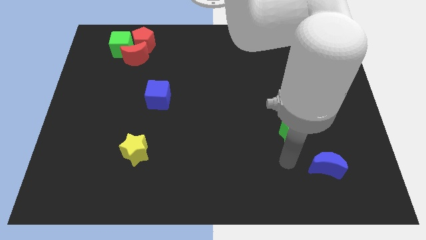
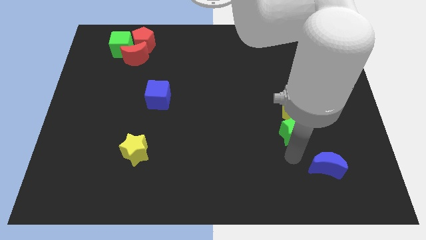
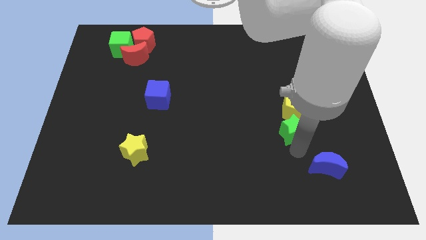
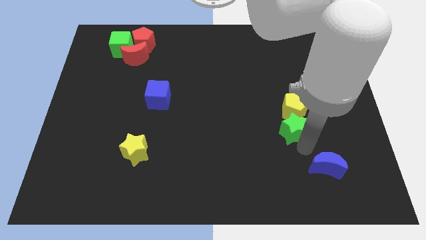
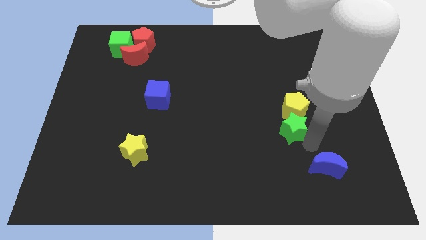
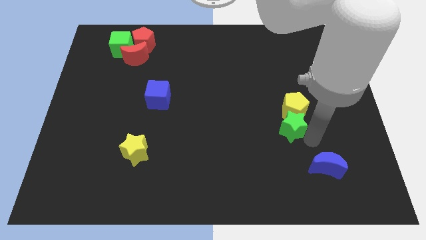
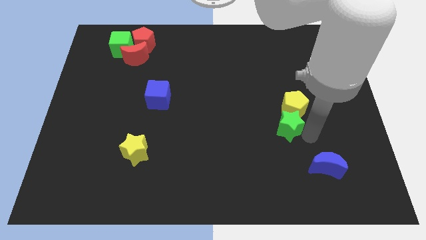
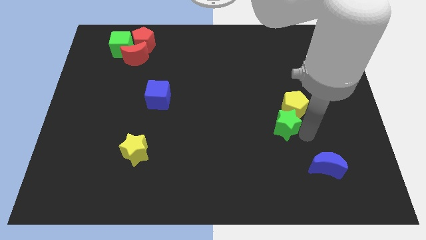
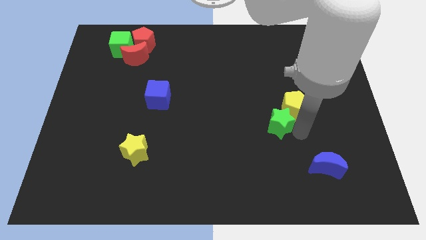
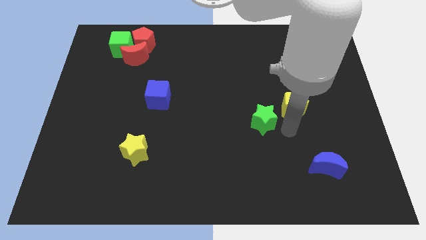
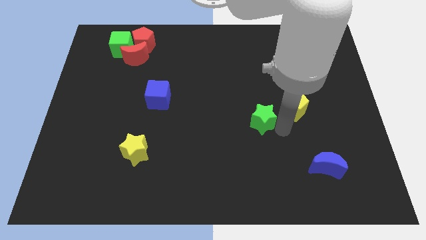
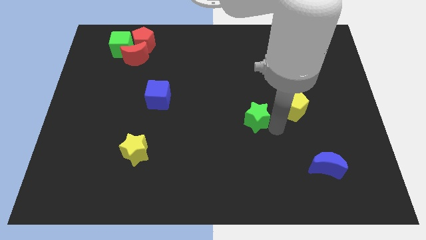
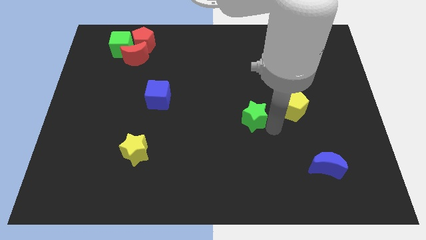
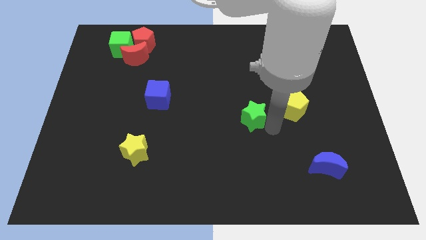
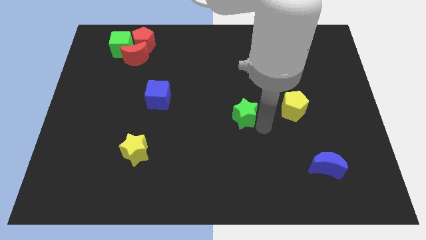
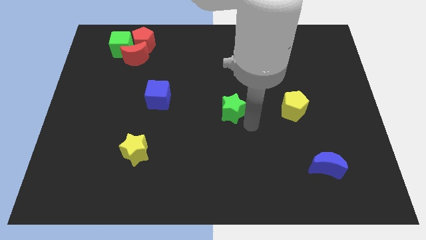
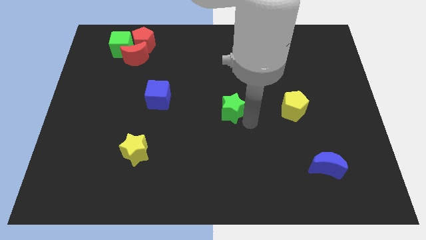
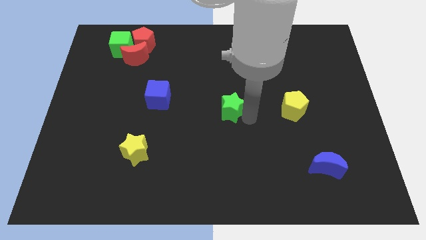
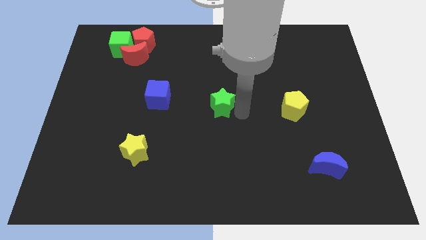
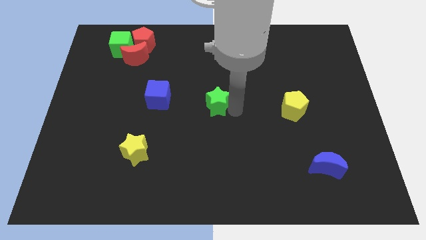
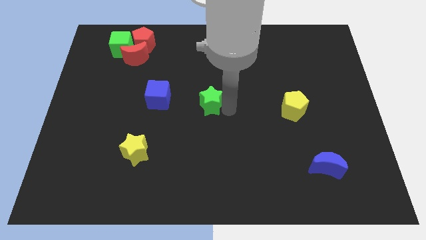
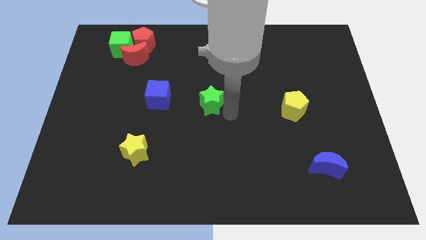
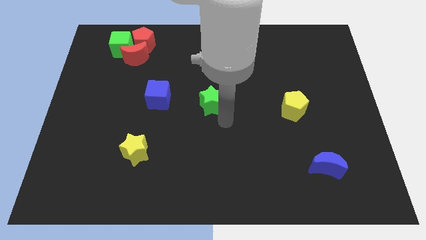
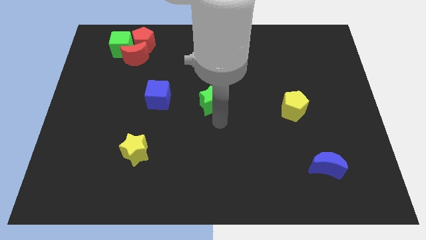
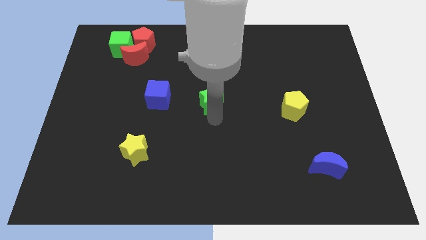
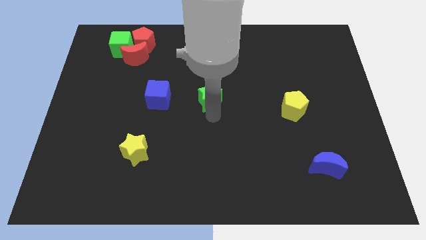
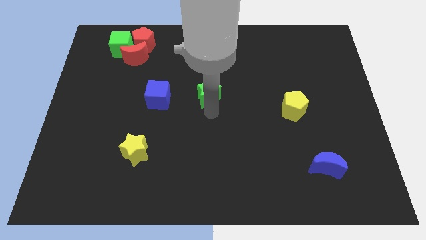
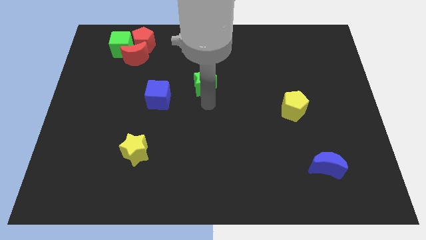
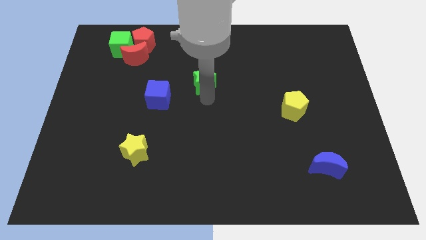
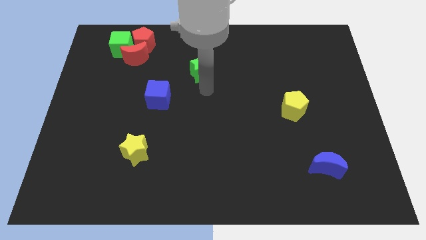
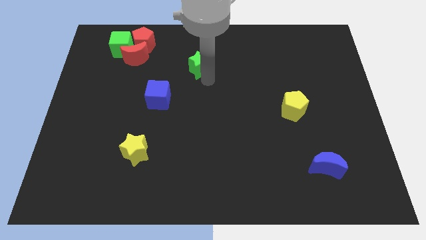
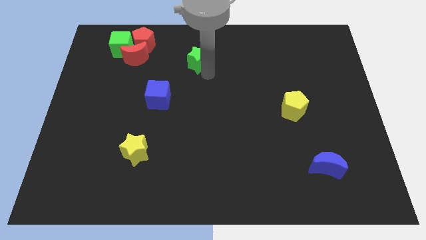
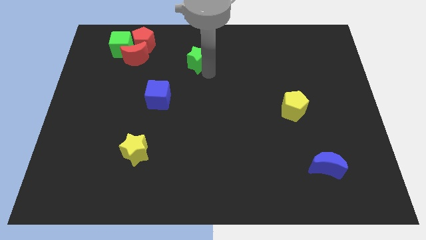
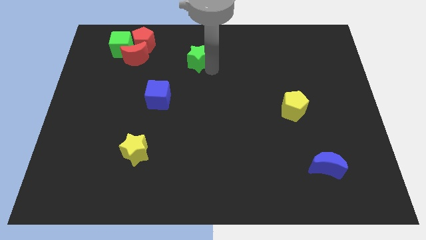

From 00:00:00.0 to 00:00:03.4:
separate the green star from the yellow pentagon

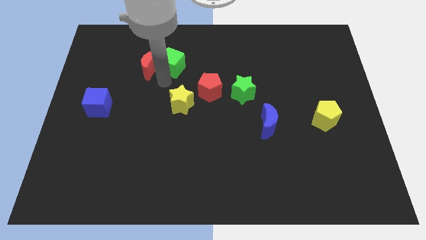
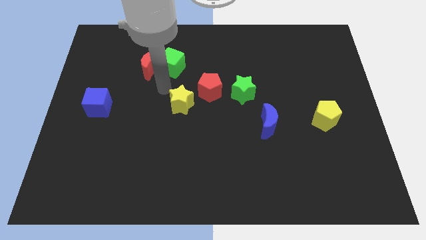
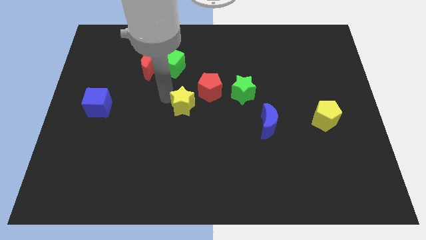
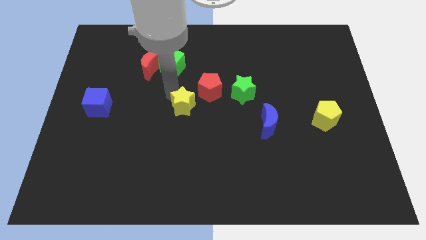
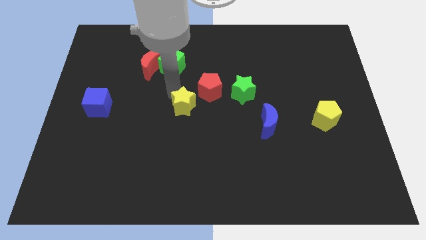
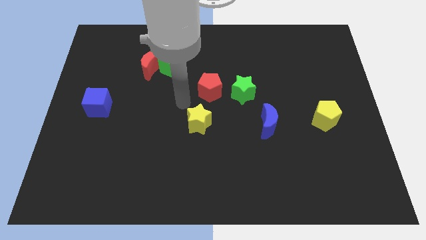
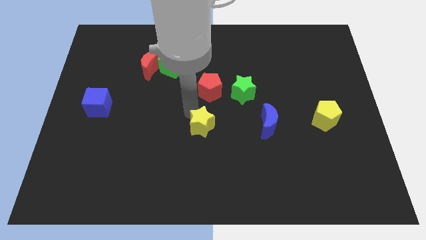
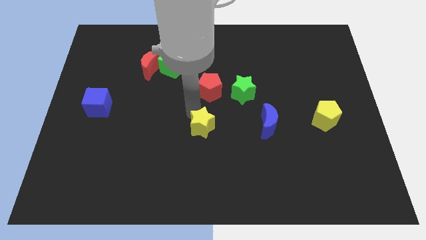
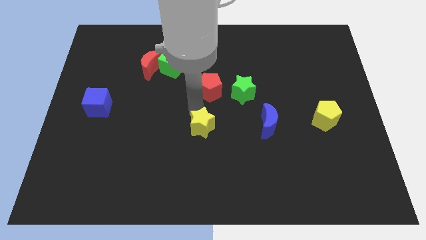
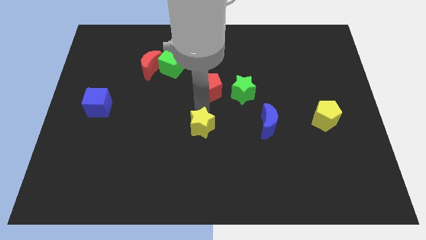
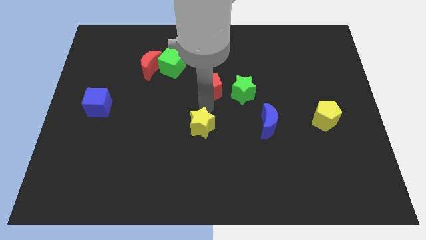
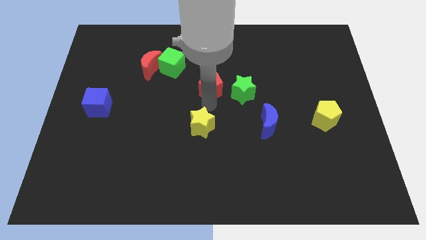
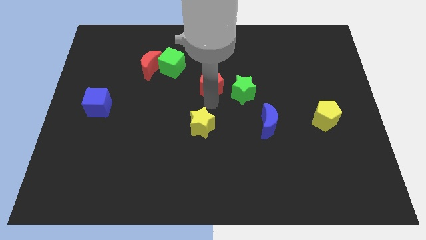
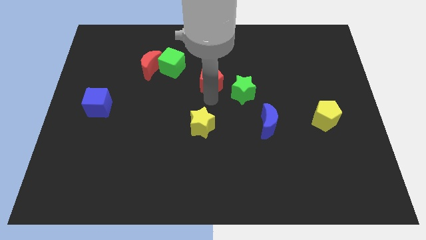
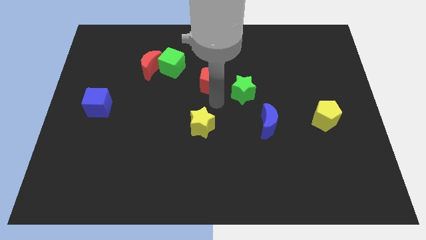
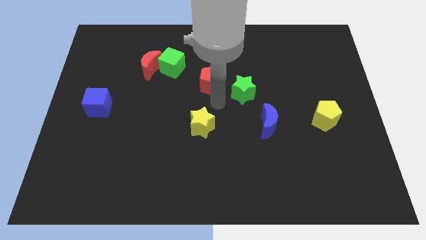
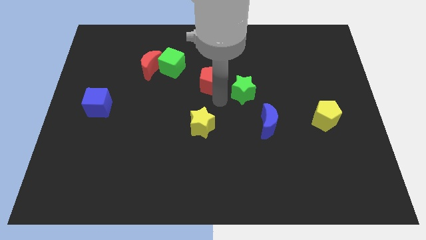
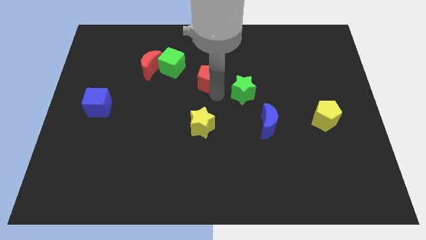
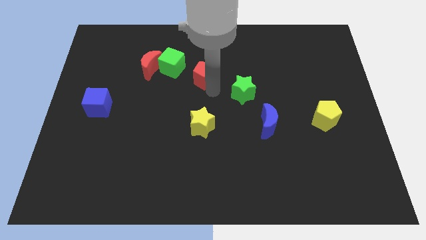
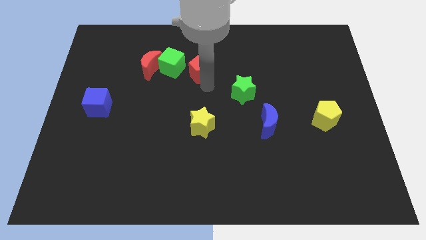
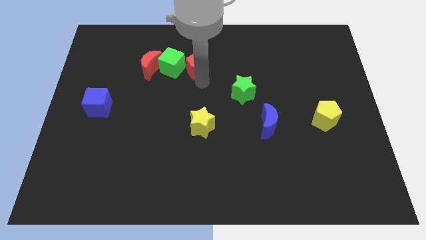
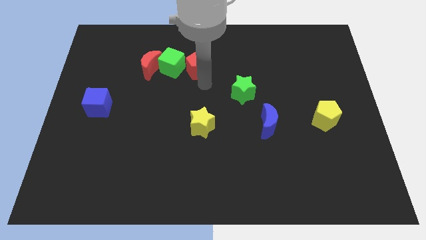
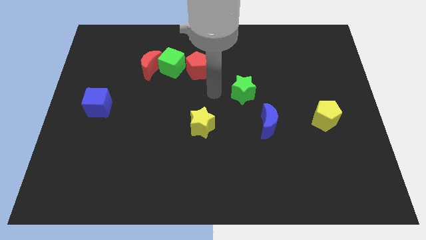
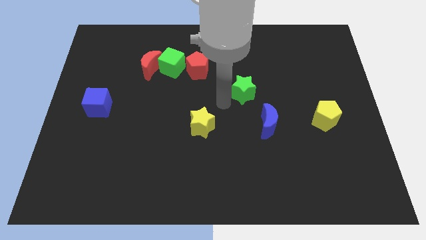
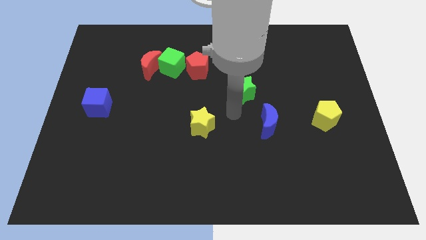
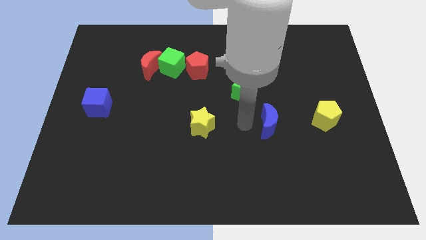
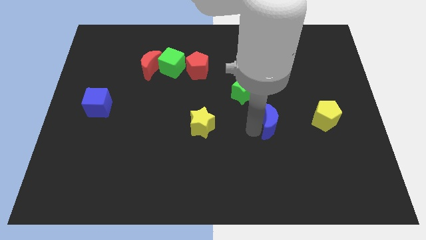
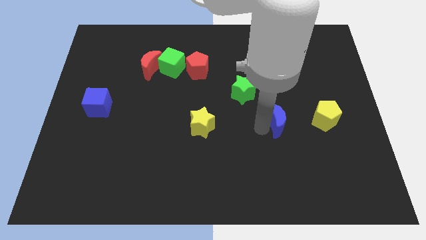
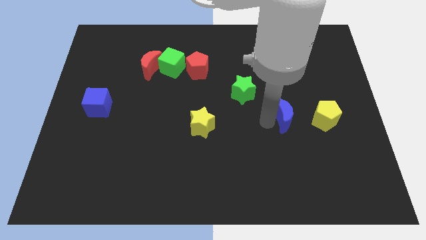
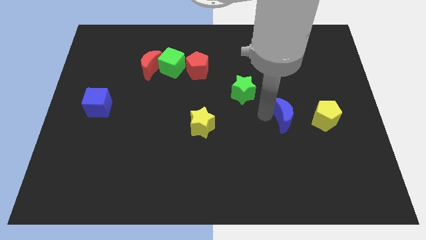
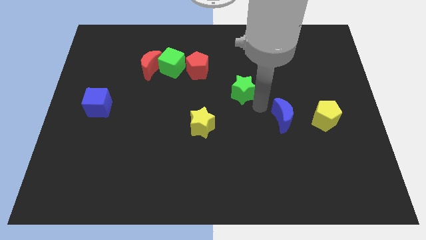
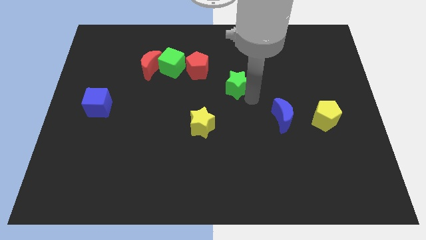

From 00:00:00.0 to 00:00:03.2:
push red pentagon diagonally top left to the yellow star

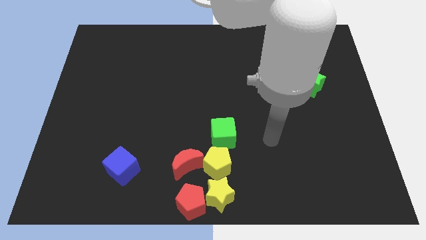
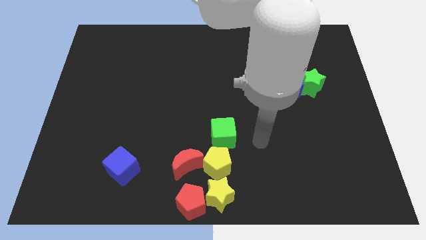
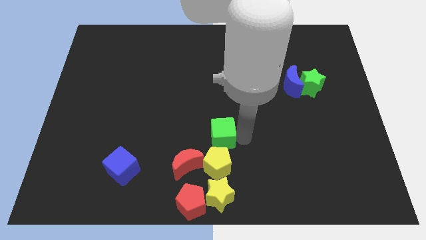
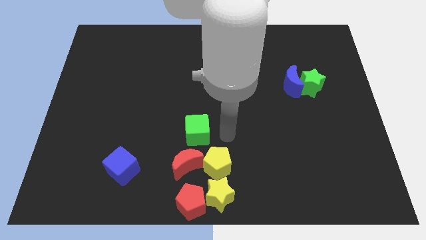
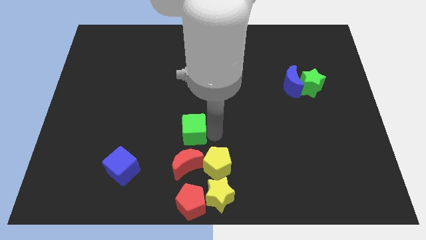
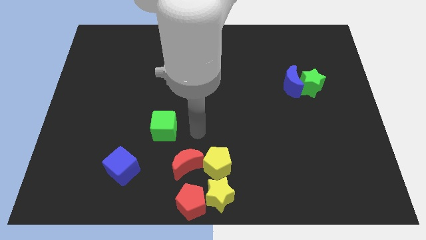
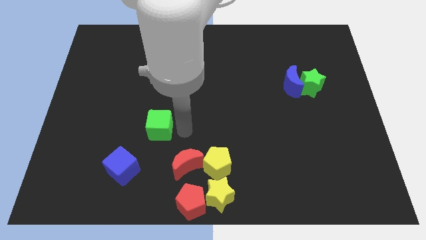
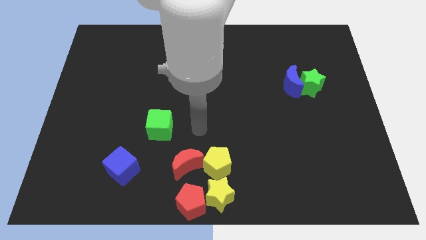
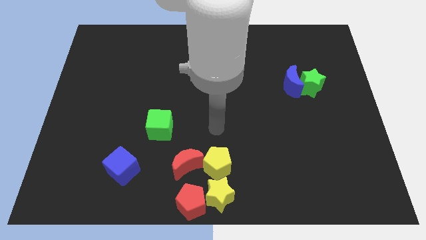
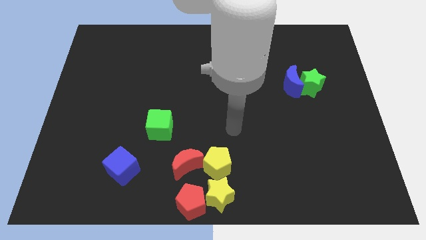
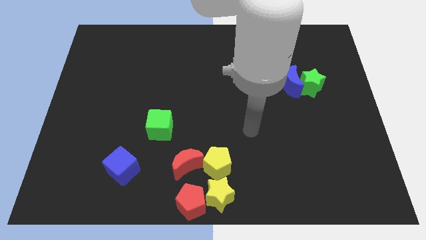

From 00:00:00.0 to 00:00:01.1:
slide the green cube diagonally top right to blue cube

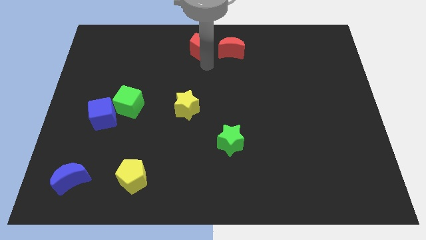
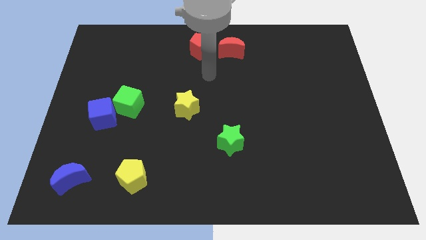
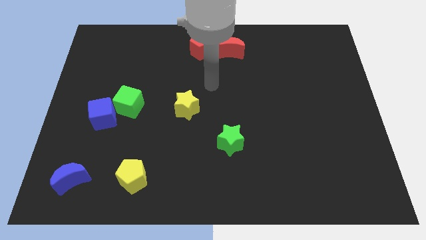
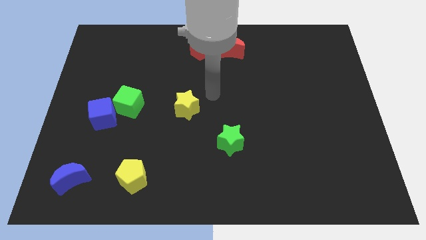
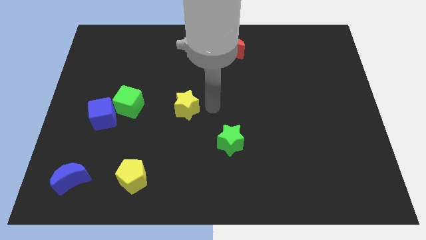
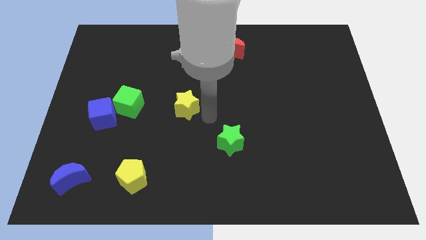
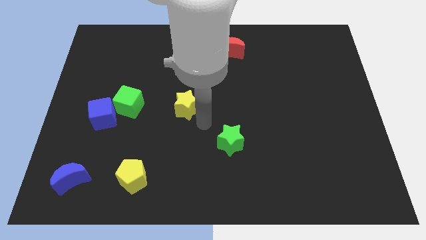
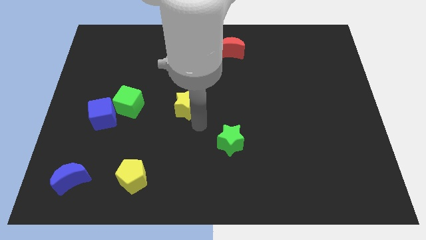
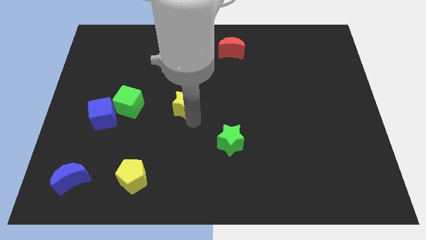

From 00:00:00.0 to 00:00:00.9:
place the arm near the yellow star

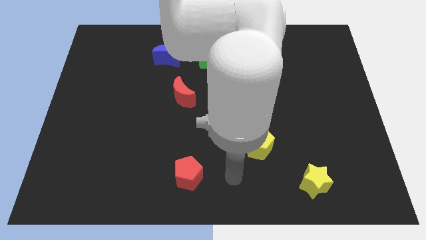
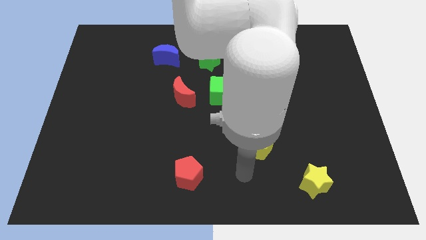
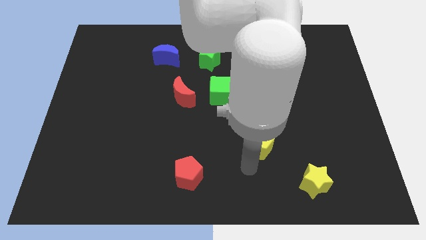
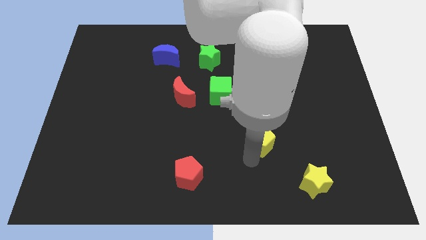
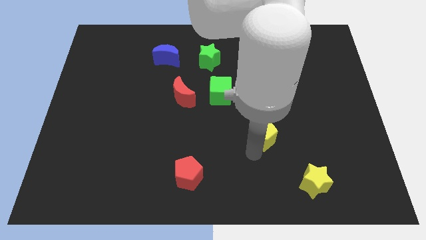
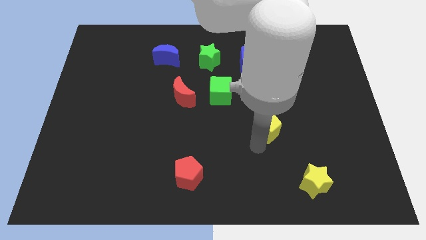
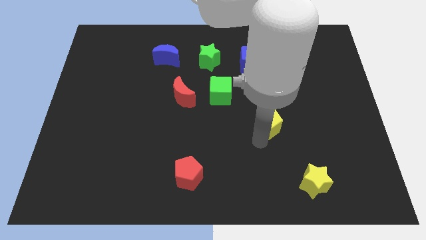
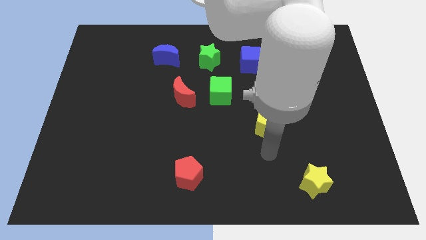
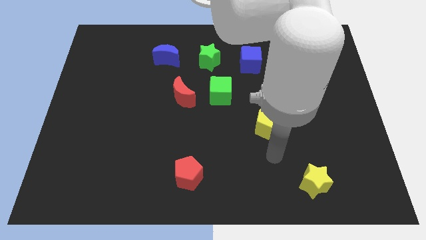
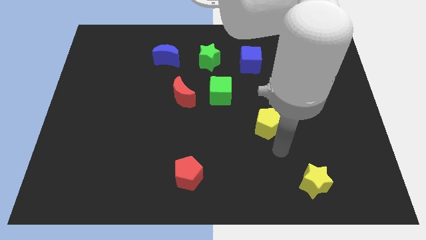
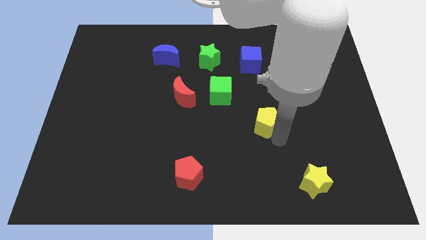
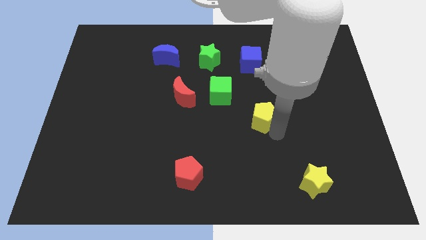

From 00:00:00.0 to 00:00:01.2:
push the yellow pentagon slightly up
